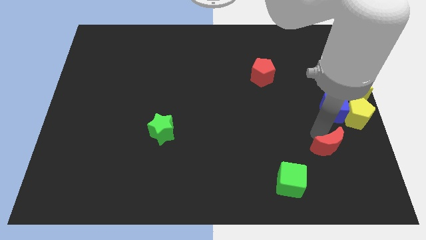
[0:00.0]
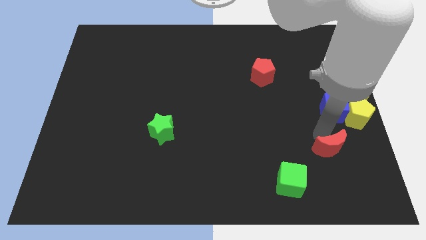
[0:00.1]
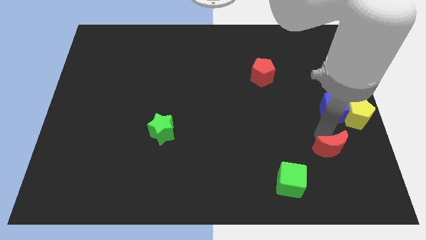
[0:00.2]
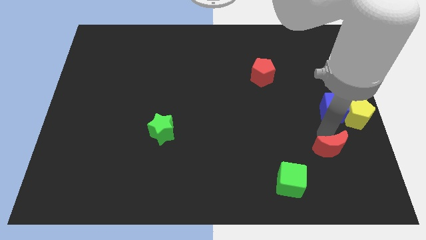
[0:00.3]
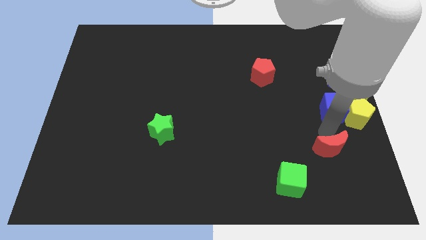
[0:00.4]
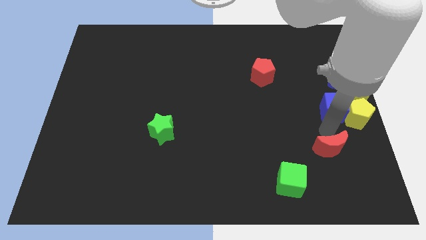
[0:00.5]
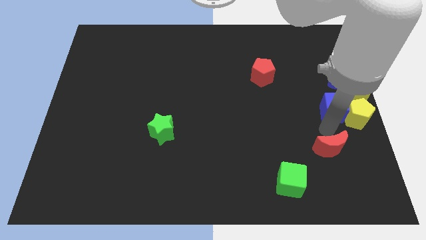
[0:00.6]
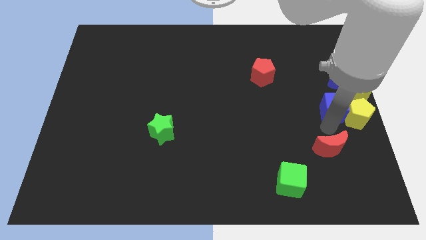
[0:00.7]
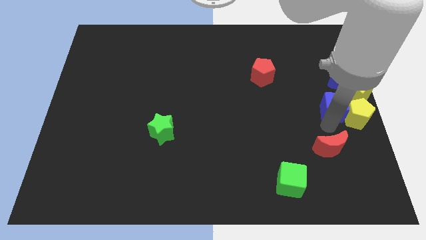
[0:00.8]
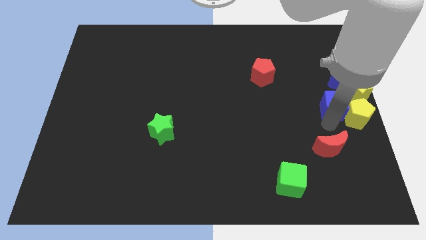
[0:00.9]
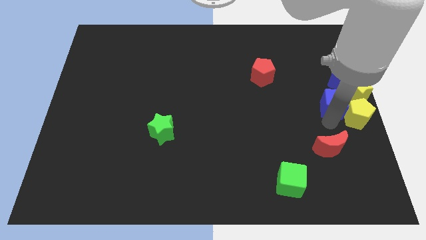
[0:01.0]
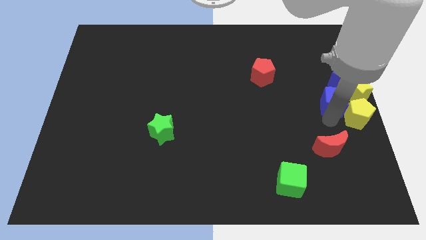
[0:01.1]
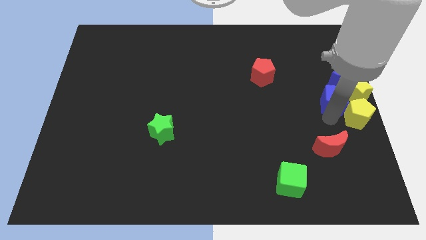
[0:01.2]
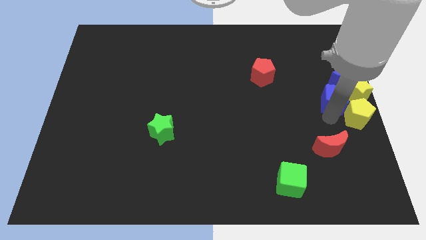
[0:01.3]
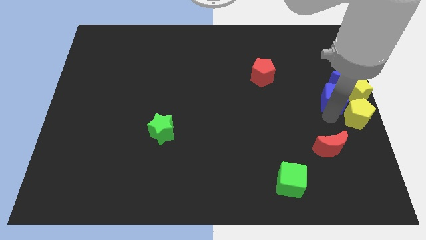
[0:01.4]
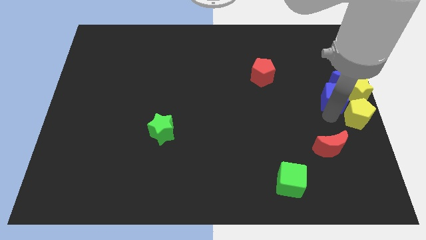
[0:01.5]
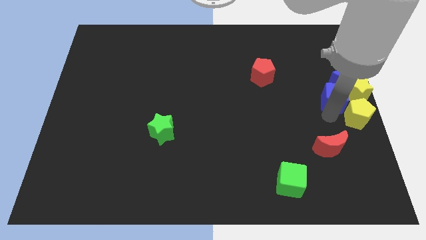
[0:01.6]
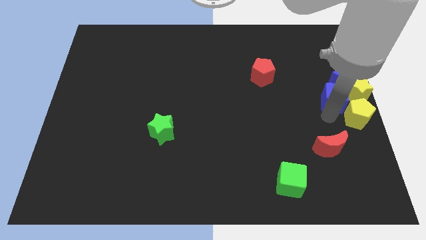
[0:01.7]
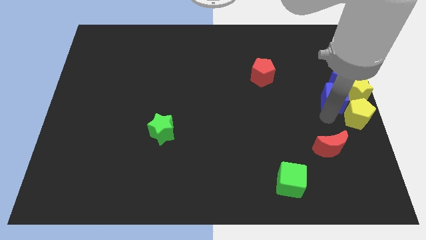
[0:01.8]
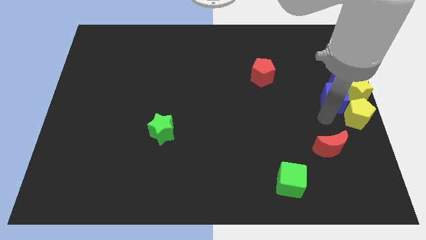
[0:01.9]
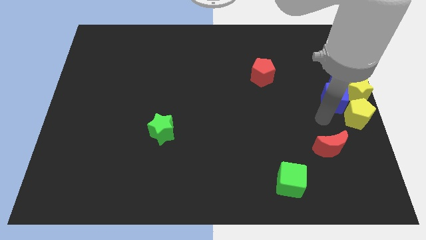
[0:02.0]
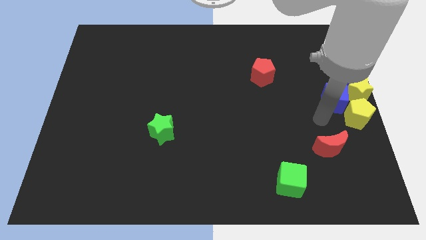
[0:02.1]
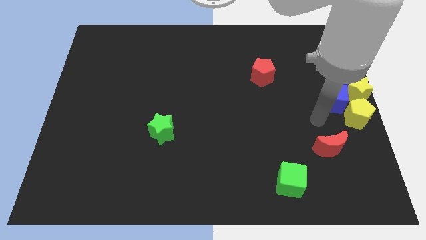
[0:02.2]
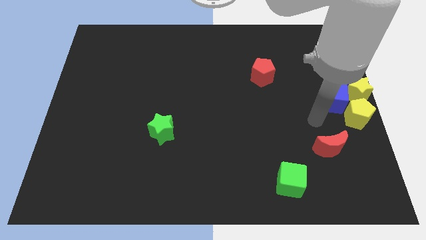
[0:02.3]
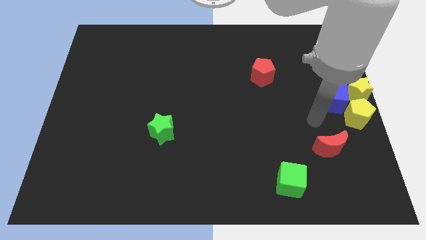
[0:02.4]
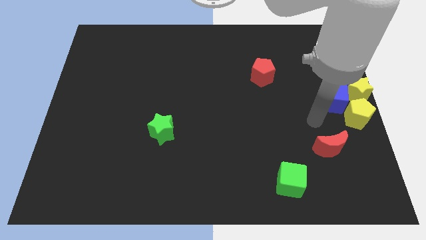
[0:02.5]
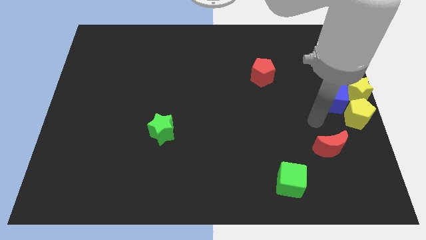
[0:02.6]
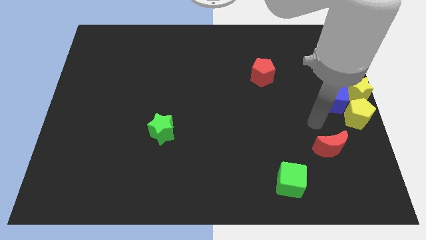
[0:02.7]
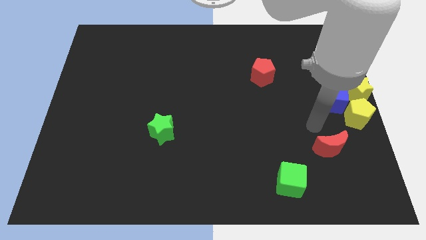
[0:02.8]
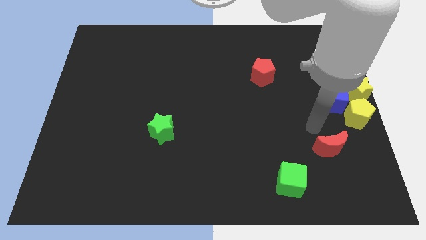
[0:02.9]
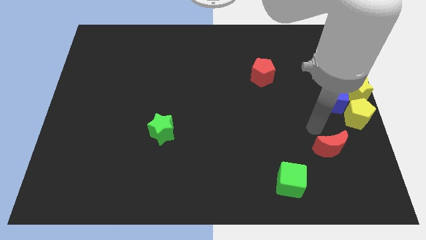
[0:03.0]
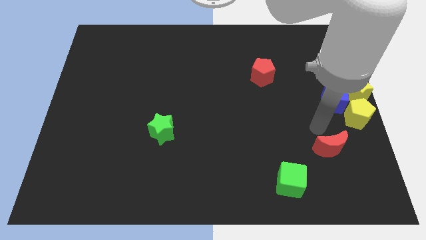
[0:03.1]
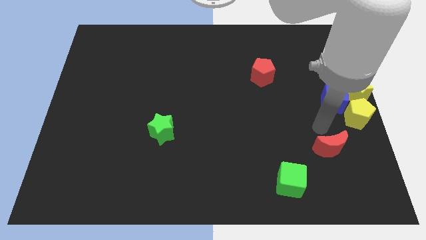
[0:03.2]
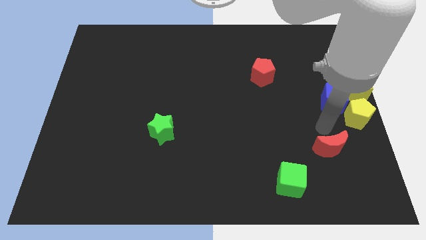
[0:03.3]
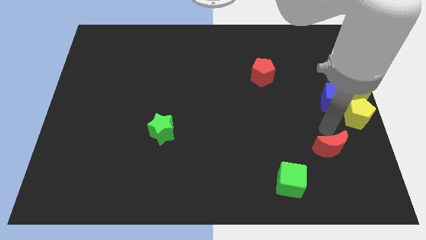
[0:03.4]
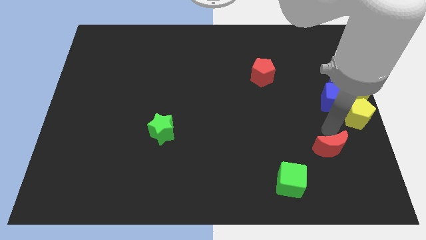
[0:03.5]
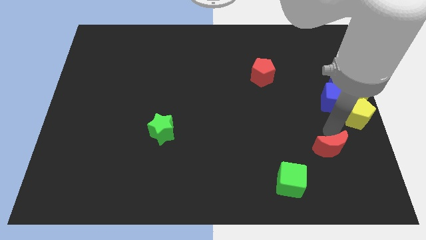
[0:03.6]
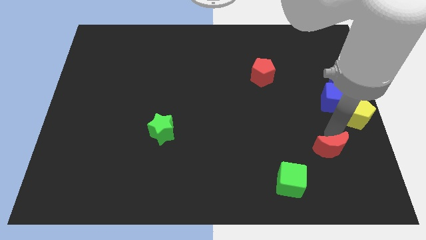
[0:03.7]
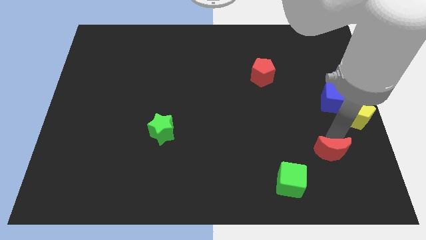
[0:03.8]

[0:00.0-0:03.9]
slightly push the blue cube towards up side

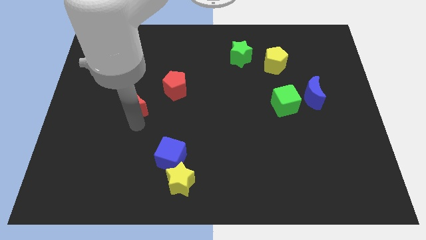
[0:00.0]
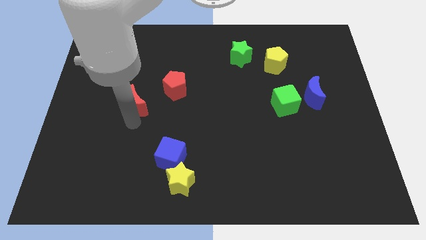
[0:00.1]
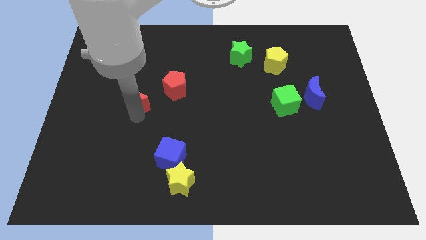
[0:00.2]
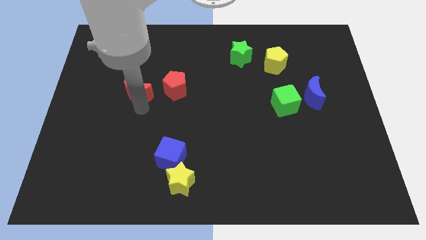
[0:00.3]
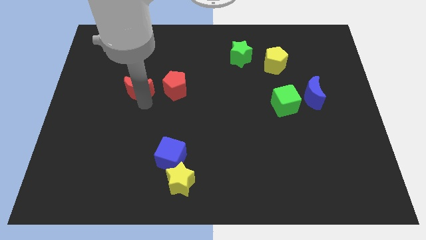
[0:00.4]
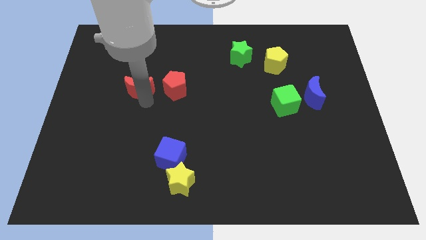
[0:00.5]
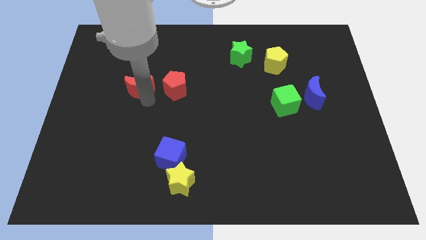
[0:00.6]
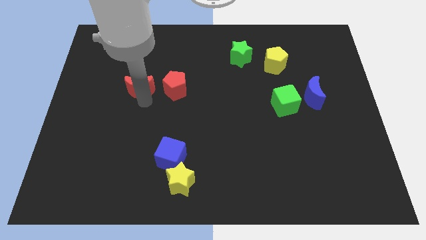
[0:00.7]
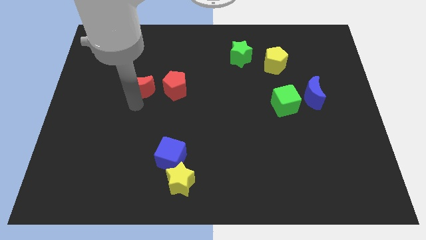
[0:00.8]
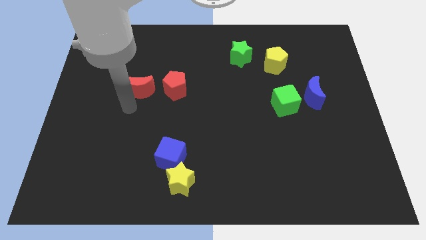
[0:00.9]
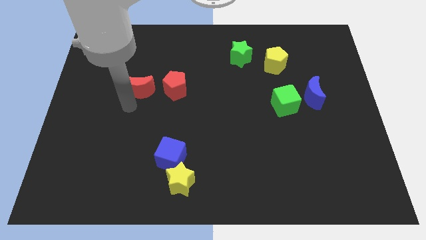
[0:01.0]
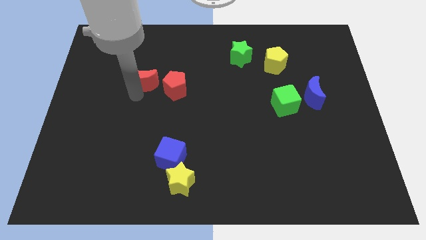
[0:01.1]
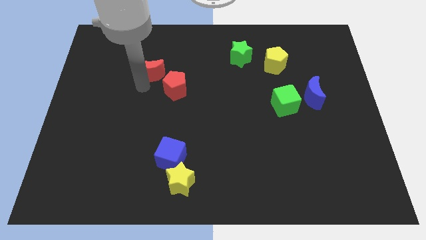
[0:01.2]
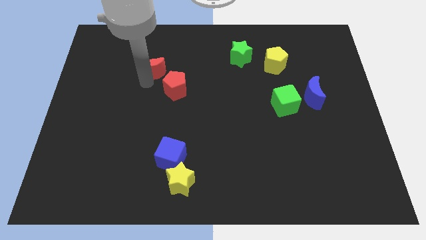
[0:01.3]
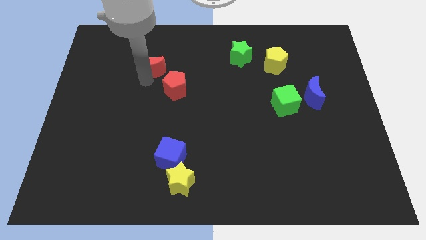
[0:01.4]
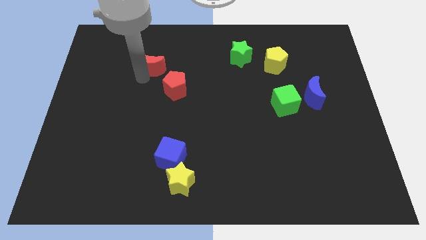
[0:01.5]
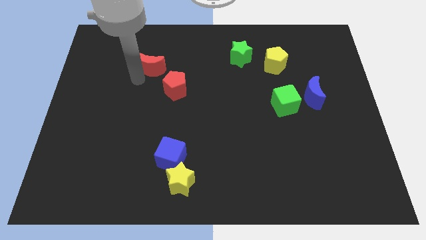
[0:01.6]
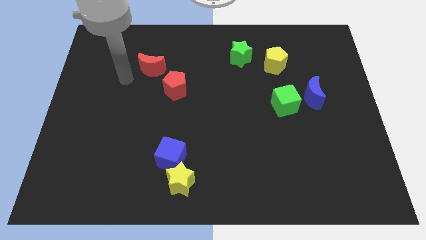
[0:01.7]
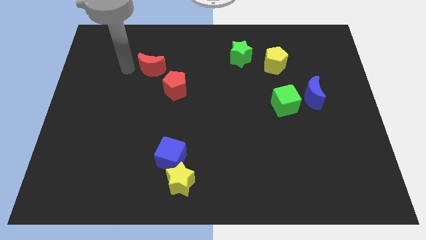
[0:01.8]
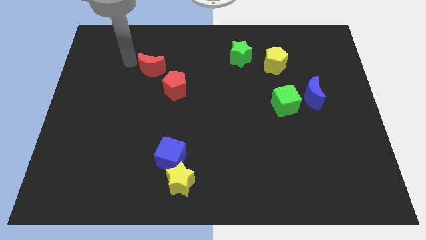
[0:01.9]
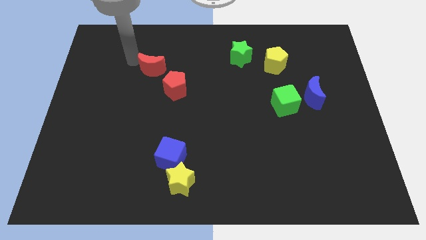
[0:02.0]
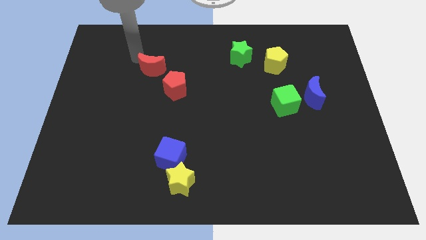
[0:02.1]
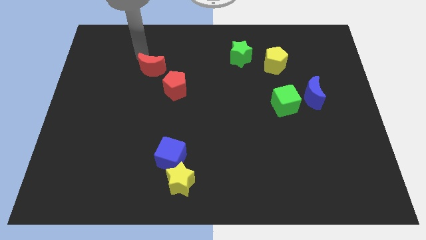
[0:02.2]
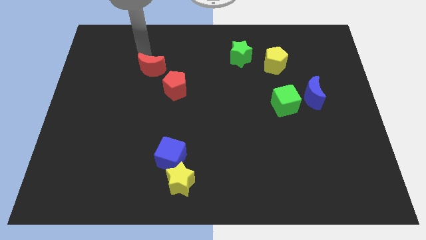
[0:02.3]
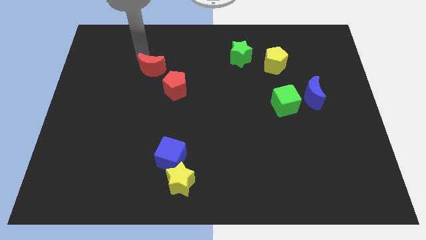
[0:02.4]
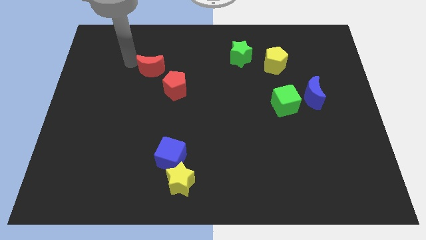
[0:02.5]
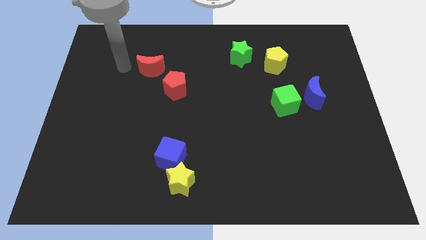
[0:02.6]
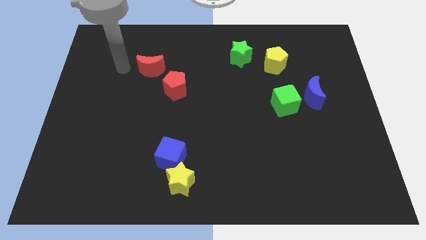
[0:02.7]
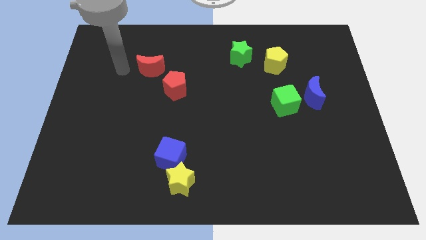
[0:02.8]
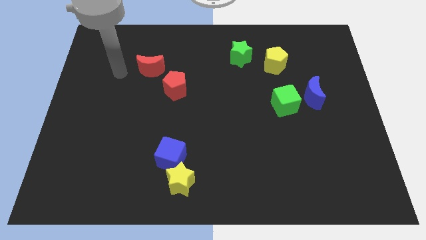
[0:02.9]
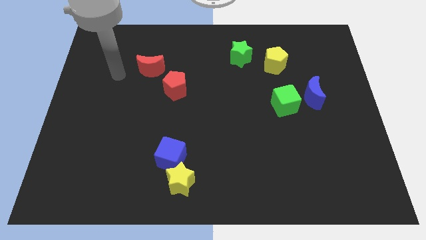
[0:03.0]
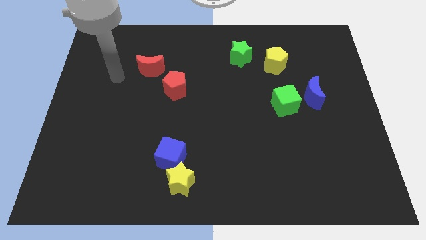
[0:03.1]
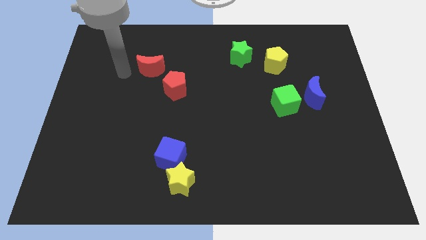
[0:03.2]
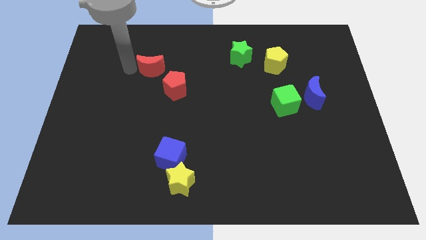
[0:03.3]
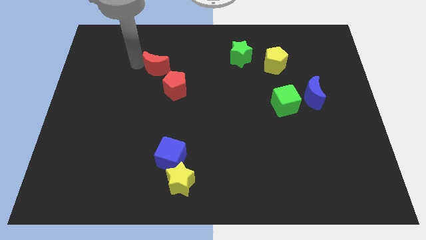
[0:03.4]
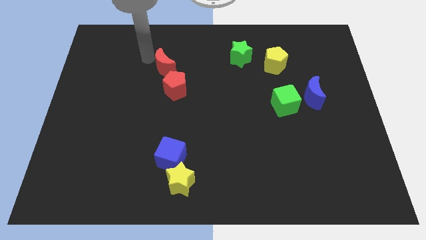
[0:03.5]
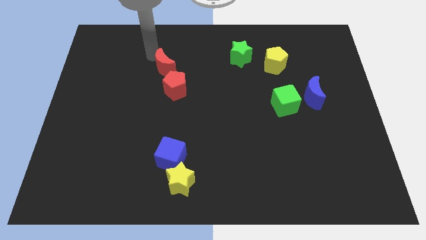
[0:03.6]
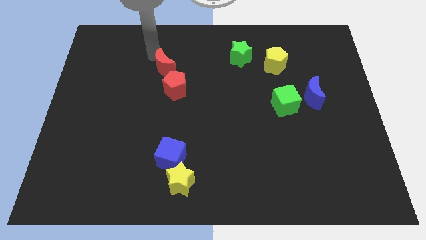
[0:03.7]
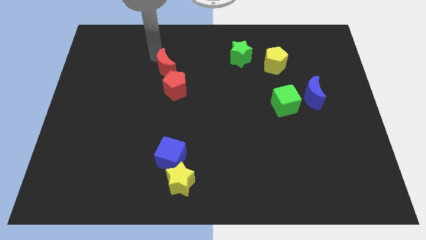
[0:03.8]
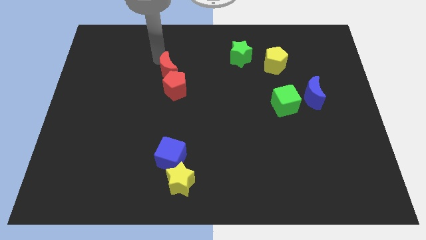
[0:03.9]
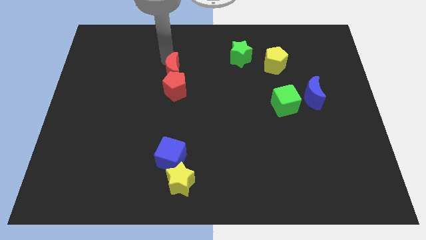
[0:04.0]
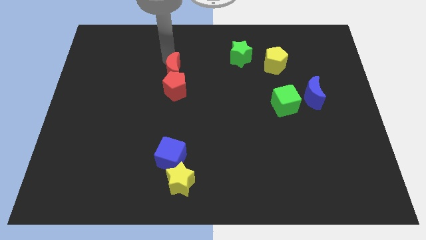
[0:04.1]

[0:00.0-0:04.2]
put the red moon vertically above the red pentagon

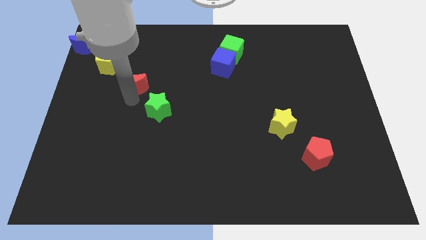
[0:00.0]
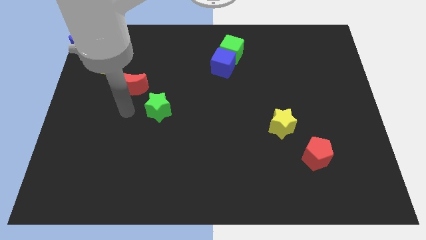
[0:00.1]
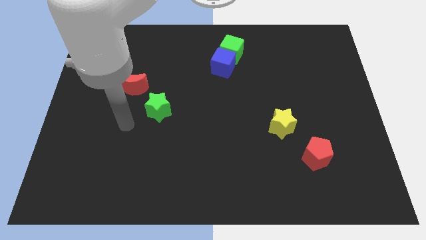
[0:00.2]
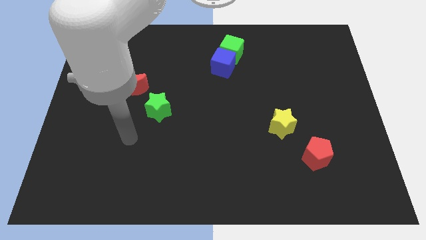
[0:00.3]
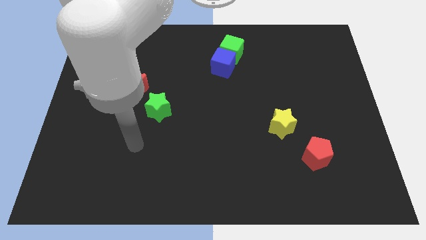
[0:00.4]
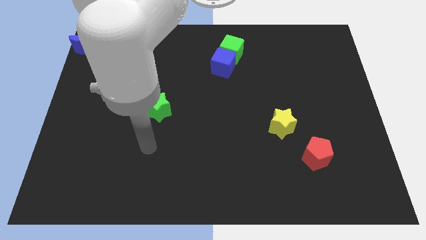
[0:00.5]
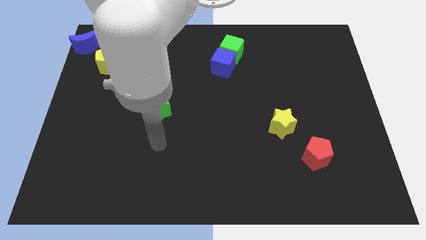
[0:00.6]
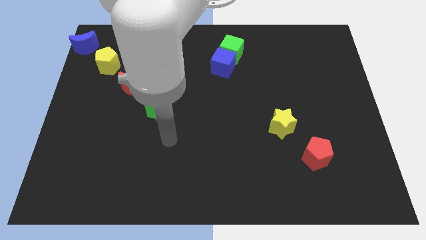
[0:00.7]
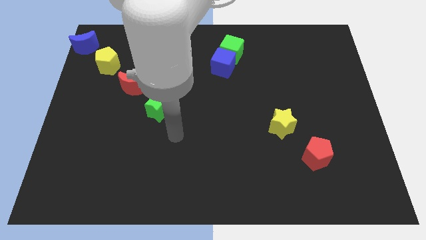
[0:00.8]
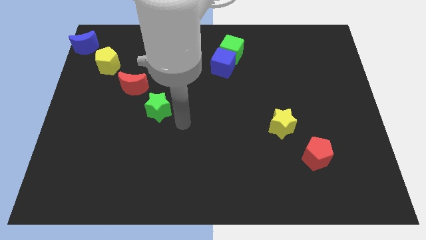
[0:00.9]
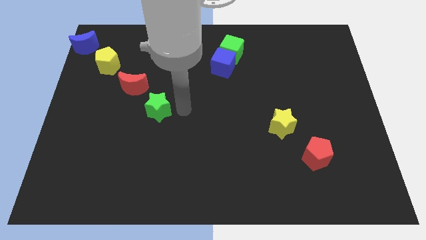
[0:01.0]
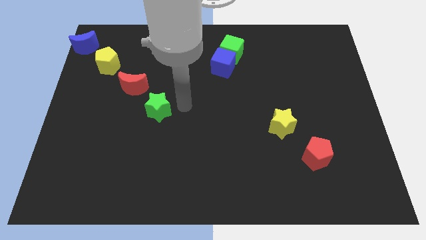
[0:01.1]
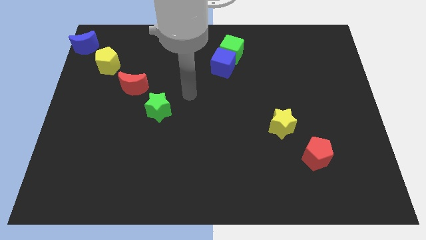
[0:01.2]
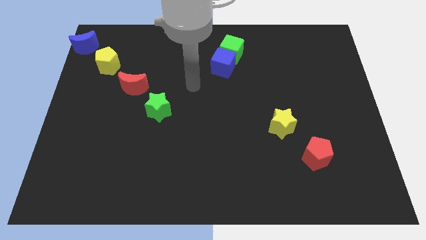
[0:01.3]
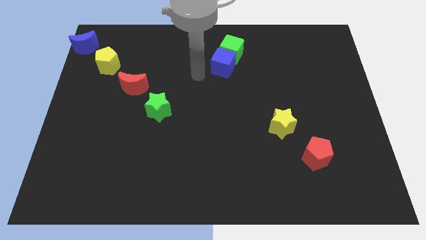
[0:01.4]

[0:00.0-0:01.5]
move your hand away from the red crescent
